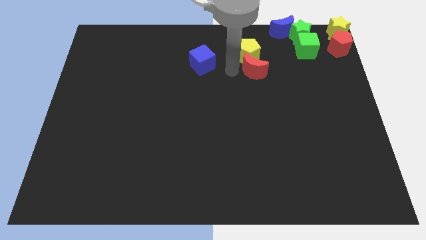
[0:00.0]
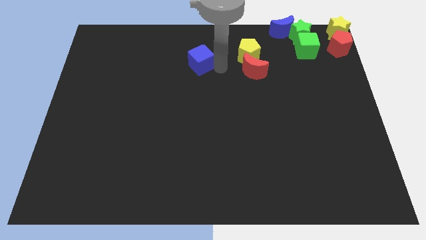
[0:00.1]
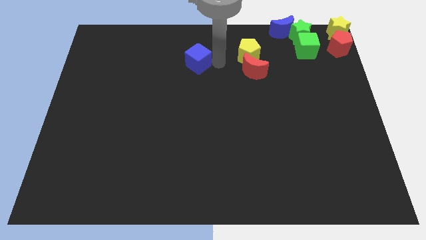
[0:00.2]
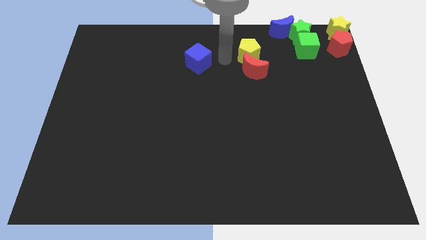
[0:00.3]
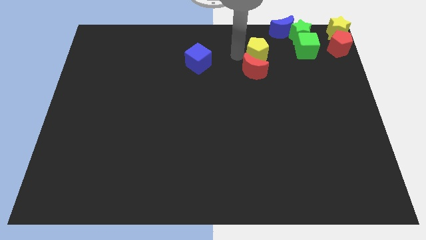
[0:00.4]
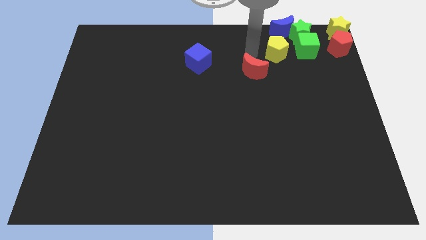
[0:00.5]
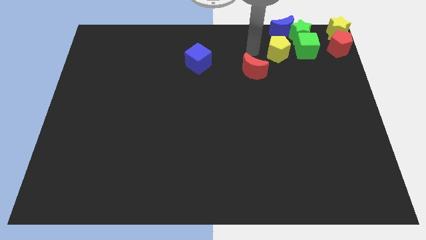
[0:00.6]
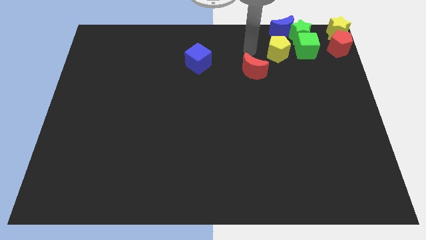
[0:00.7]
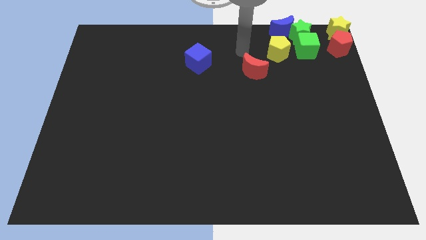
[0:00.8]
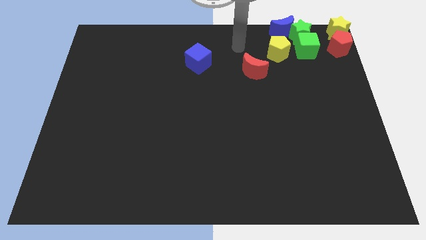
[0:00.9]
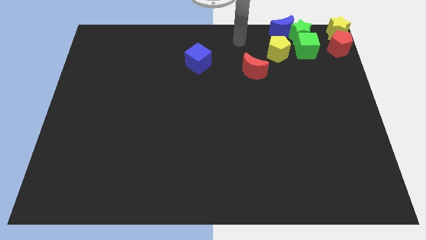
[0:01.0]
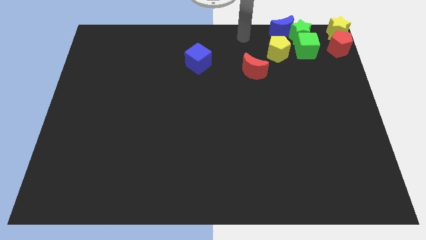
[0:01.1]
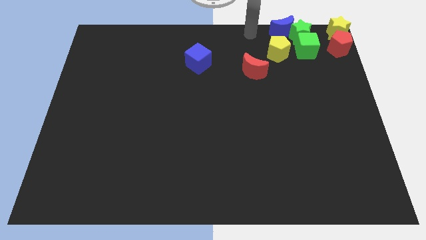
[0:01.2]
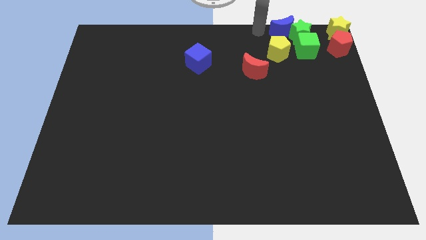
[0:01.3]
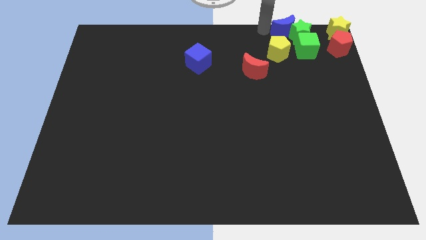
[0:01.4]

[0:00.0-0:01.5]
put the yellow pentagon left to the green cube

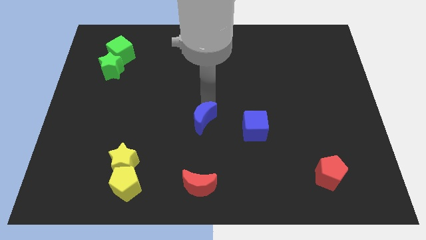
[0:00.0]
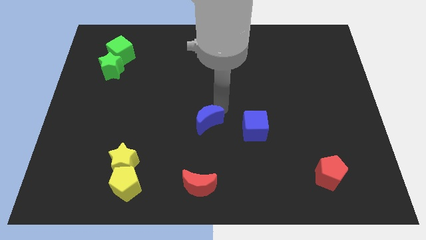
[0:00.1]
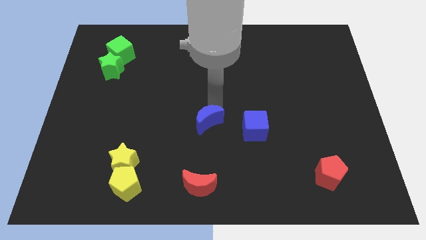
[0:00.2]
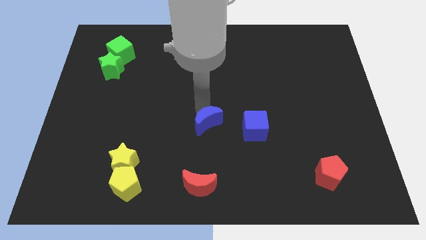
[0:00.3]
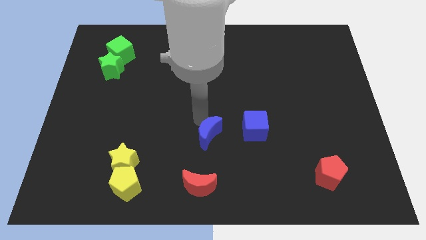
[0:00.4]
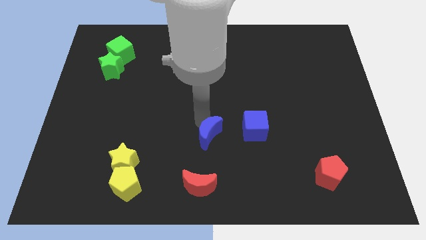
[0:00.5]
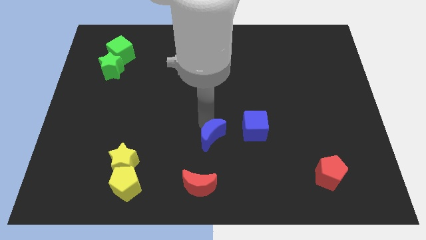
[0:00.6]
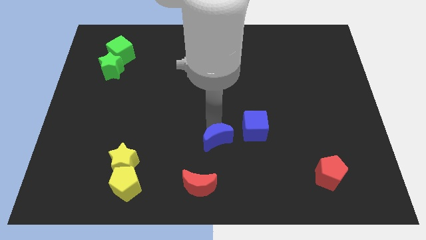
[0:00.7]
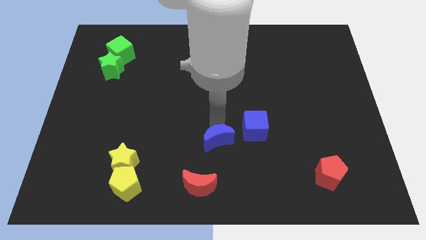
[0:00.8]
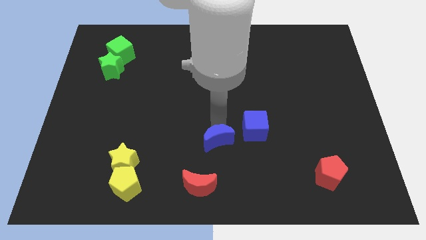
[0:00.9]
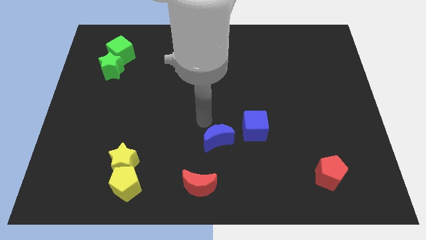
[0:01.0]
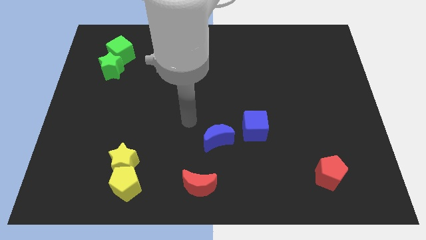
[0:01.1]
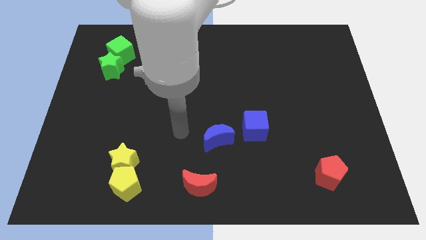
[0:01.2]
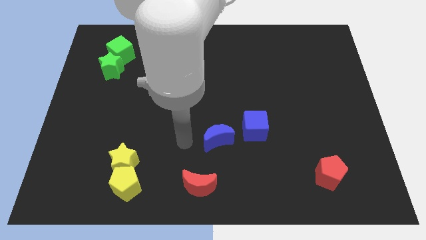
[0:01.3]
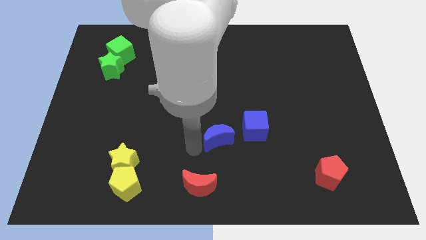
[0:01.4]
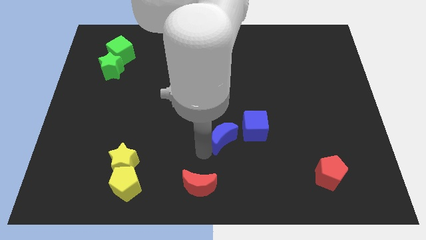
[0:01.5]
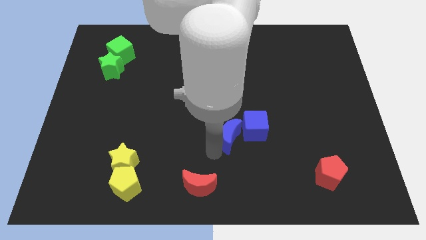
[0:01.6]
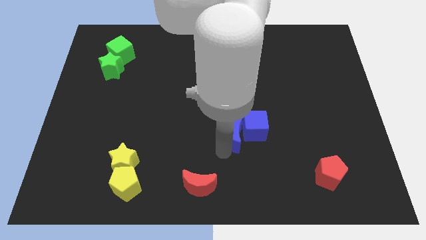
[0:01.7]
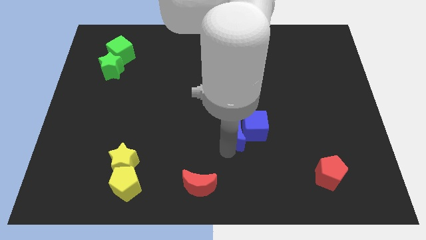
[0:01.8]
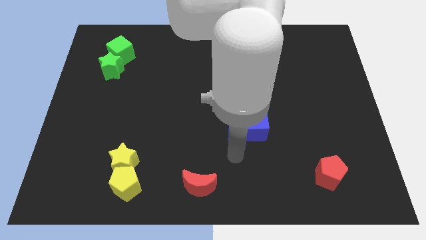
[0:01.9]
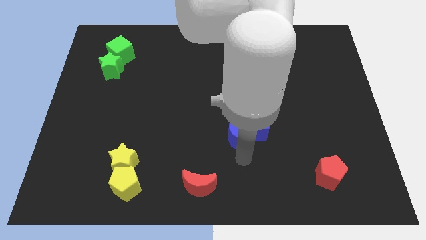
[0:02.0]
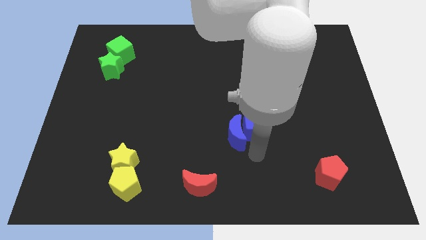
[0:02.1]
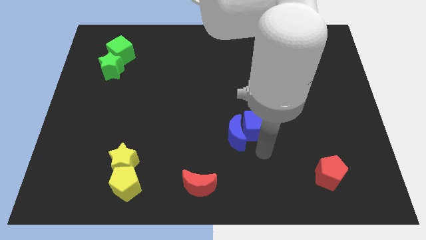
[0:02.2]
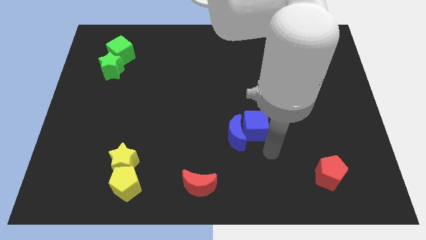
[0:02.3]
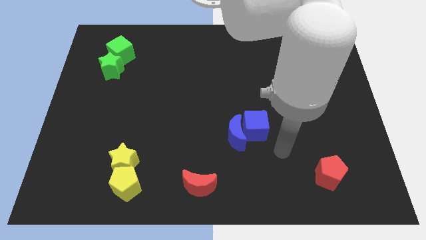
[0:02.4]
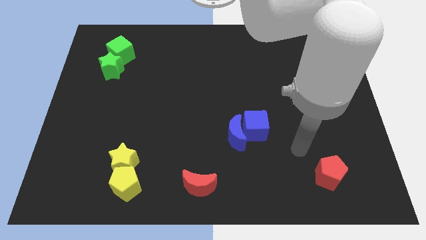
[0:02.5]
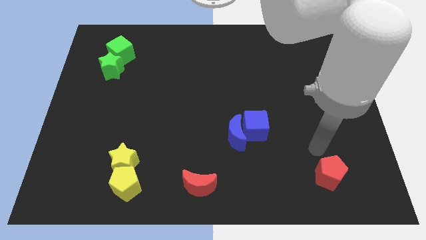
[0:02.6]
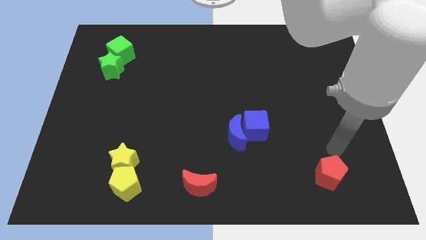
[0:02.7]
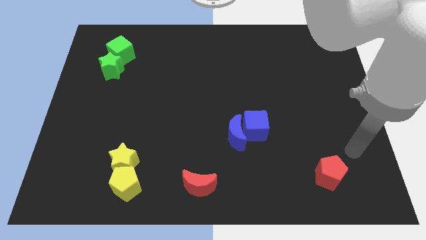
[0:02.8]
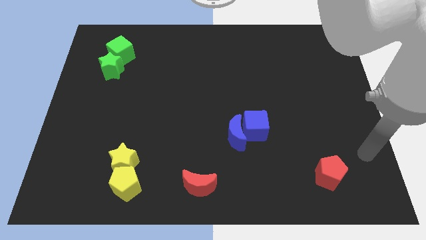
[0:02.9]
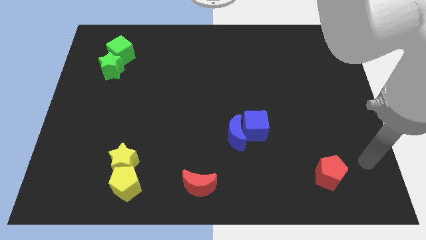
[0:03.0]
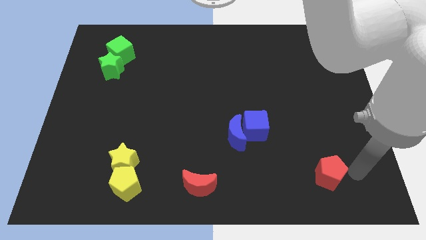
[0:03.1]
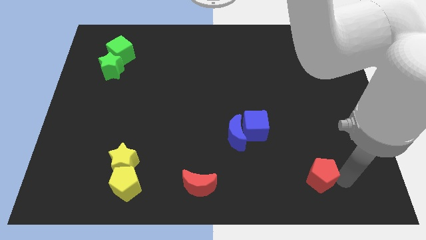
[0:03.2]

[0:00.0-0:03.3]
place your arm right to the red pentagon

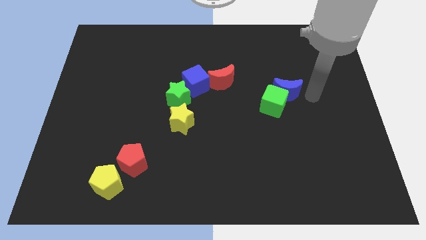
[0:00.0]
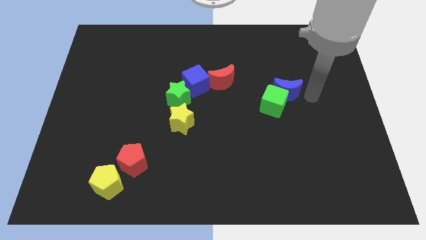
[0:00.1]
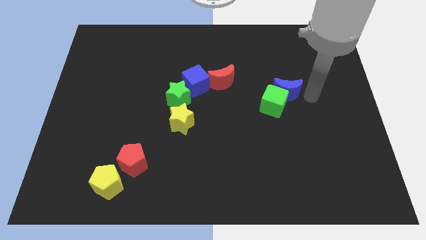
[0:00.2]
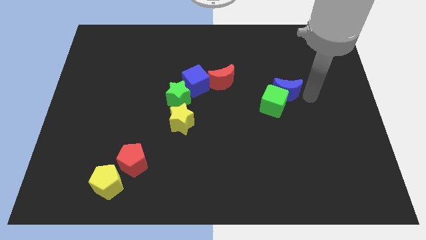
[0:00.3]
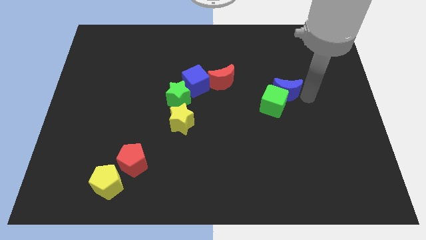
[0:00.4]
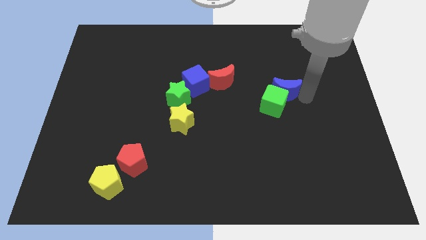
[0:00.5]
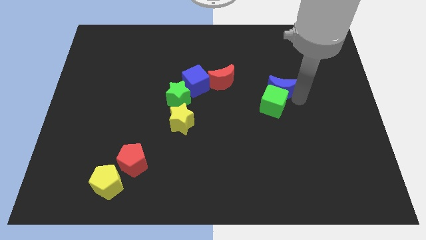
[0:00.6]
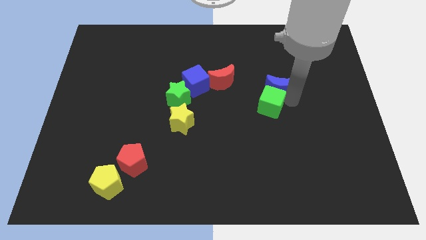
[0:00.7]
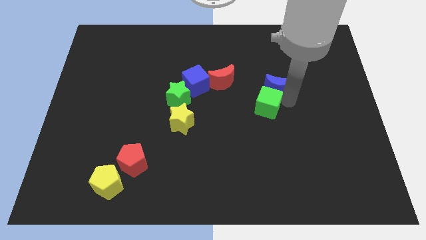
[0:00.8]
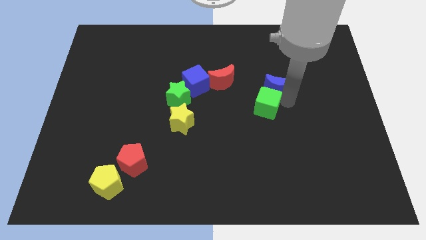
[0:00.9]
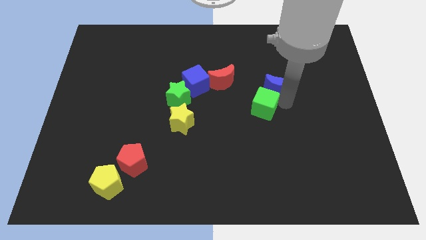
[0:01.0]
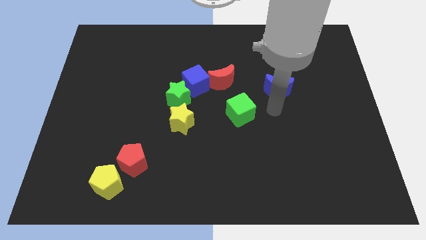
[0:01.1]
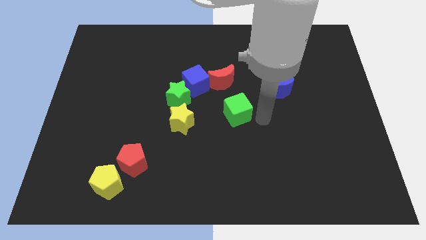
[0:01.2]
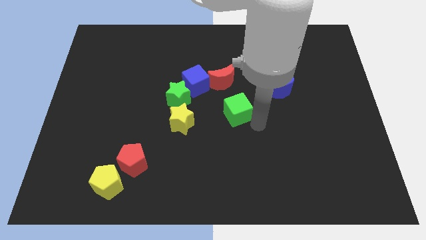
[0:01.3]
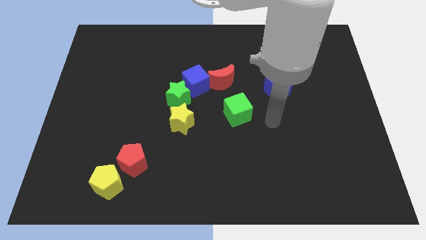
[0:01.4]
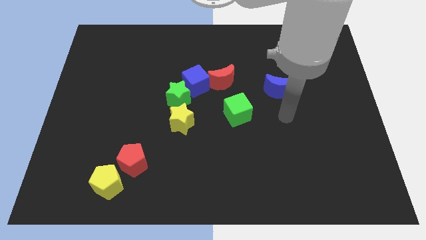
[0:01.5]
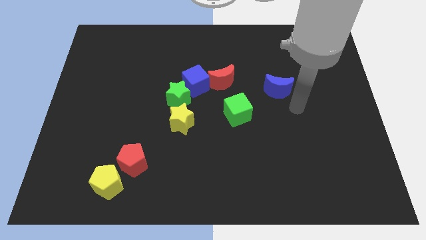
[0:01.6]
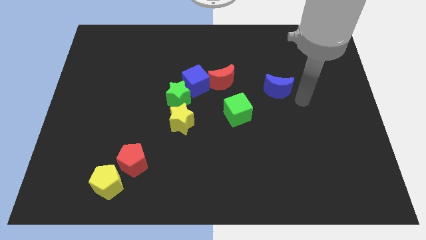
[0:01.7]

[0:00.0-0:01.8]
separate green cube and the blue moon

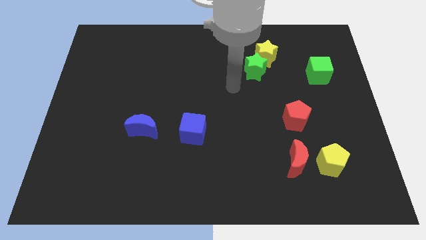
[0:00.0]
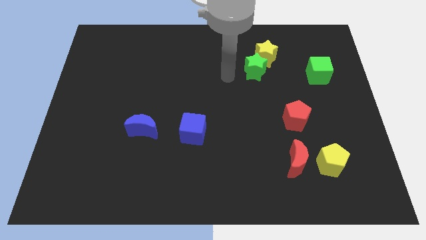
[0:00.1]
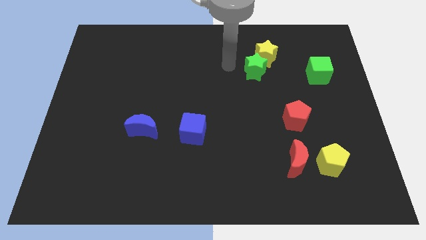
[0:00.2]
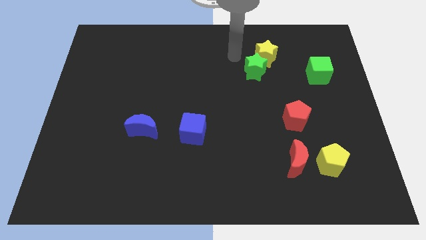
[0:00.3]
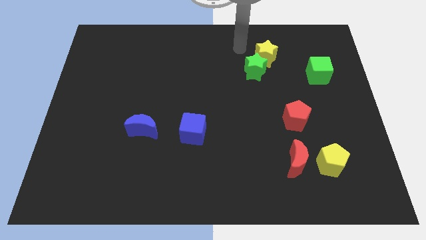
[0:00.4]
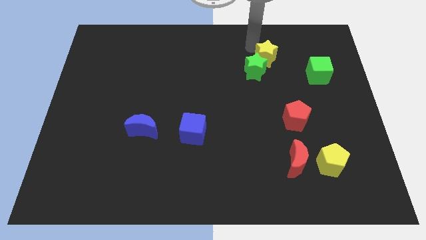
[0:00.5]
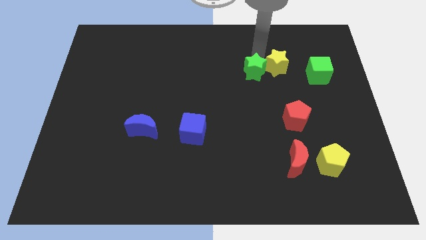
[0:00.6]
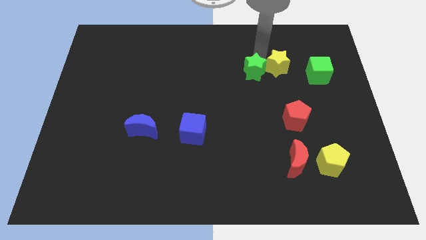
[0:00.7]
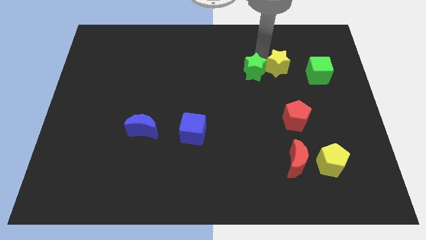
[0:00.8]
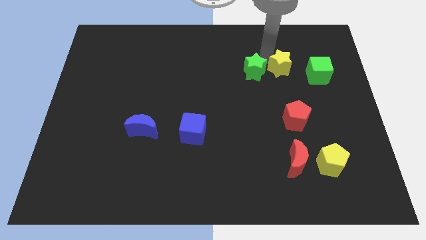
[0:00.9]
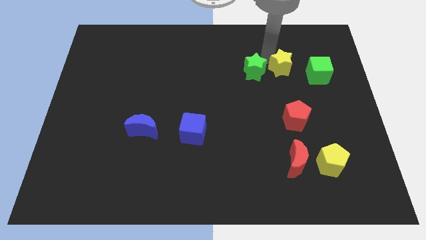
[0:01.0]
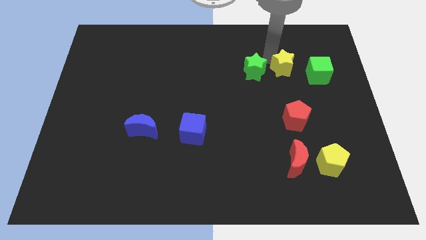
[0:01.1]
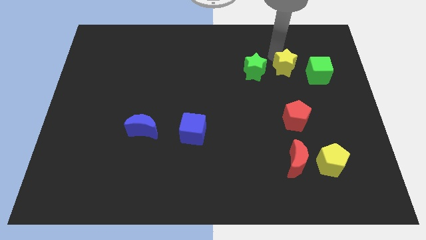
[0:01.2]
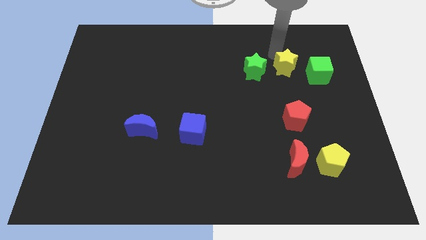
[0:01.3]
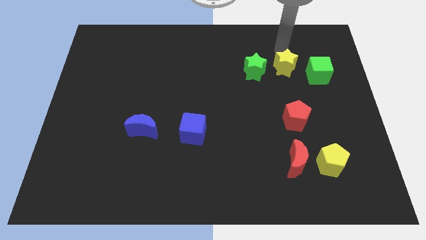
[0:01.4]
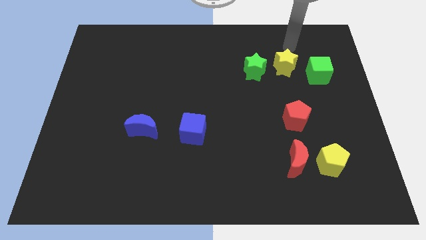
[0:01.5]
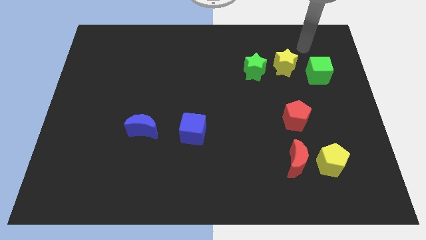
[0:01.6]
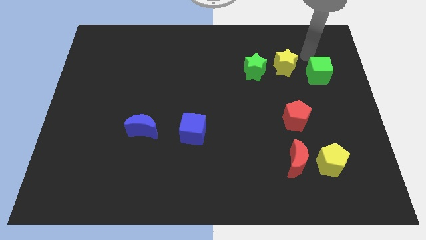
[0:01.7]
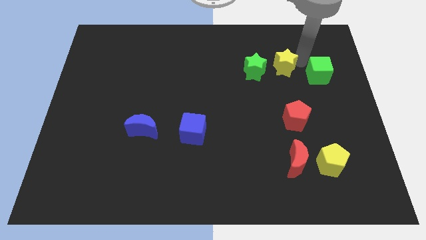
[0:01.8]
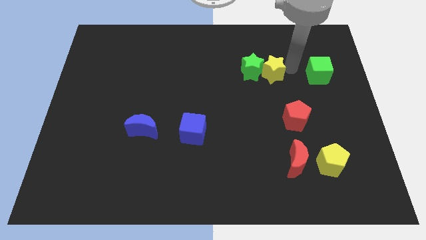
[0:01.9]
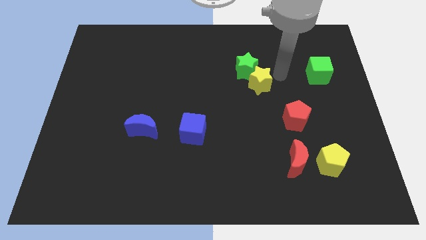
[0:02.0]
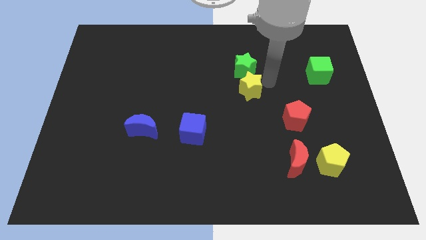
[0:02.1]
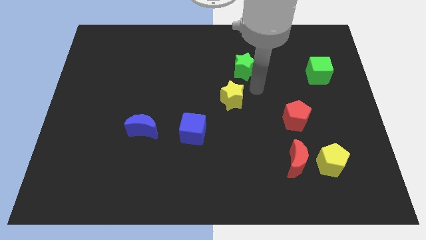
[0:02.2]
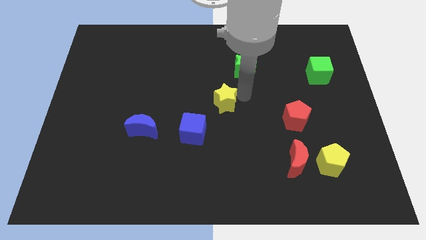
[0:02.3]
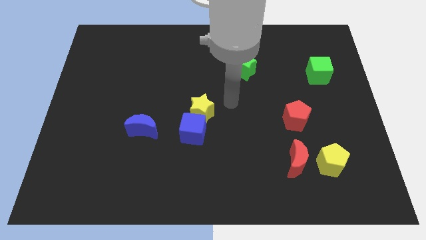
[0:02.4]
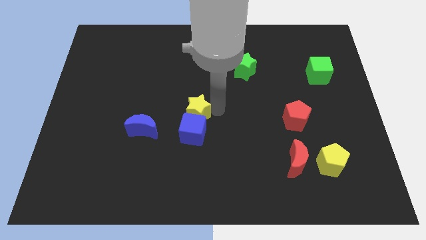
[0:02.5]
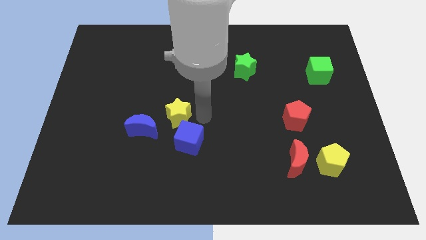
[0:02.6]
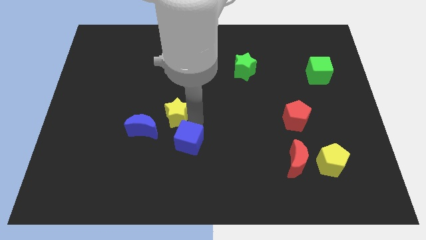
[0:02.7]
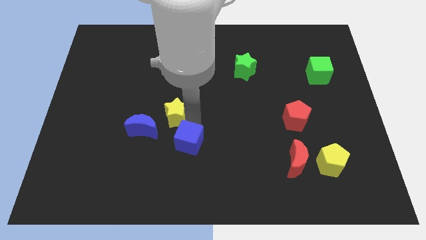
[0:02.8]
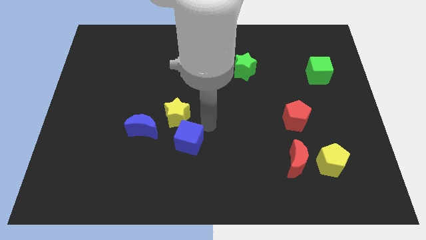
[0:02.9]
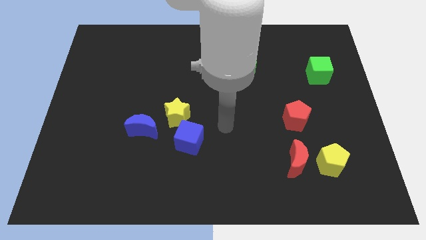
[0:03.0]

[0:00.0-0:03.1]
move the yellow star into blue cube
